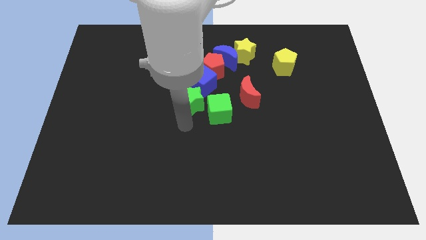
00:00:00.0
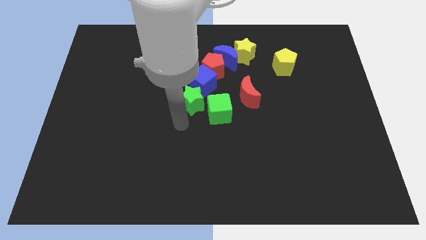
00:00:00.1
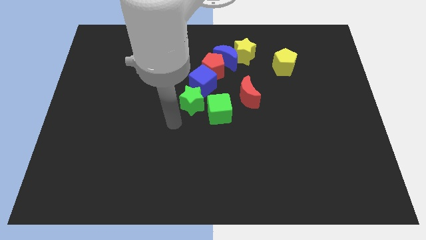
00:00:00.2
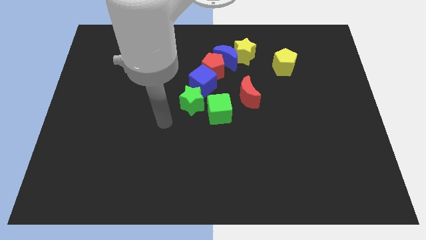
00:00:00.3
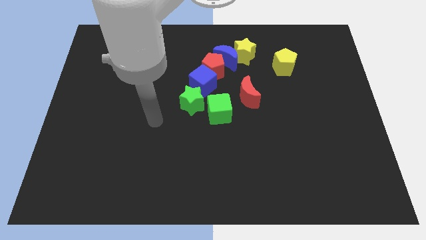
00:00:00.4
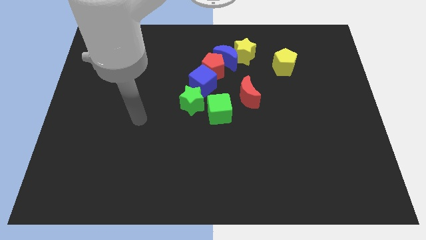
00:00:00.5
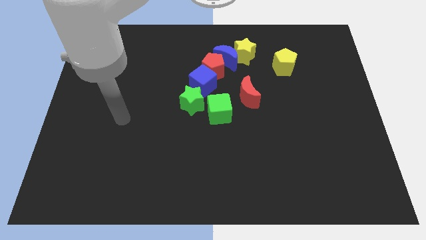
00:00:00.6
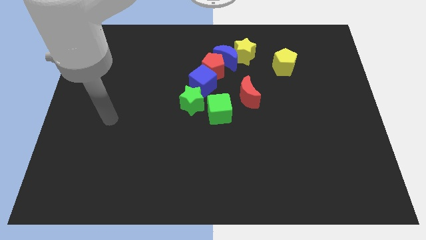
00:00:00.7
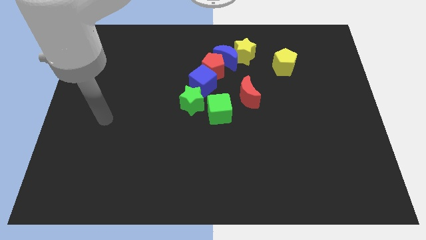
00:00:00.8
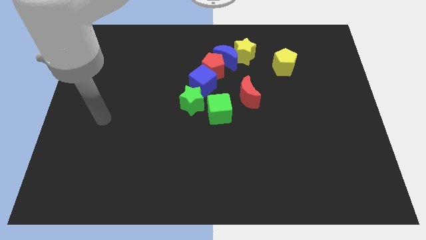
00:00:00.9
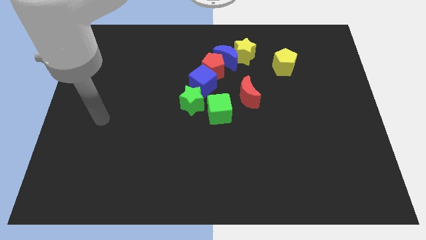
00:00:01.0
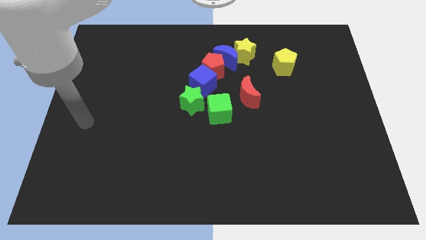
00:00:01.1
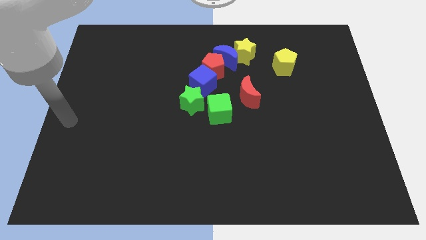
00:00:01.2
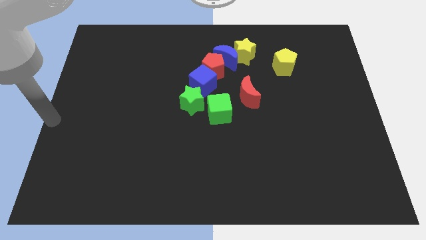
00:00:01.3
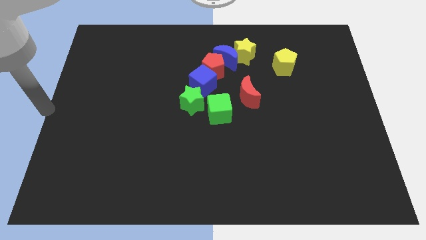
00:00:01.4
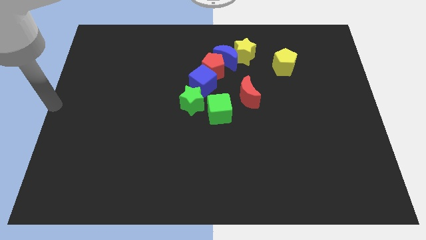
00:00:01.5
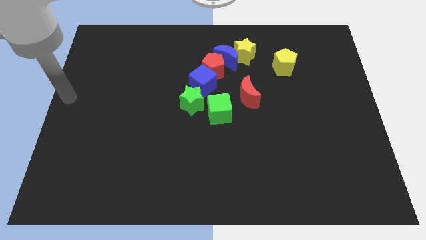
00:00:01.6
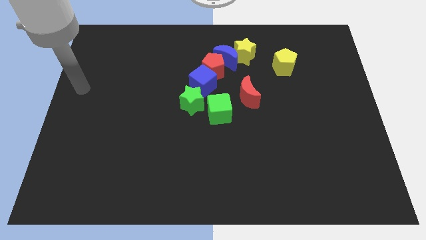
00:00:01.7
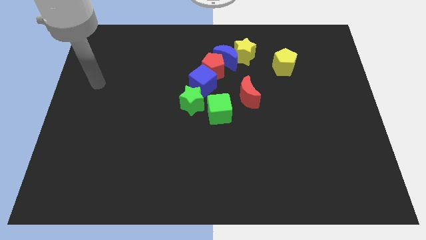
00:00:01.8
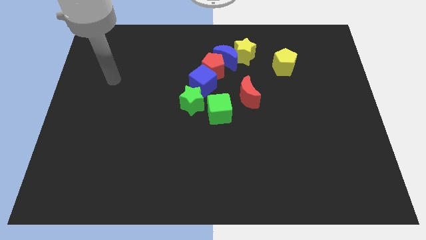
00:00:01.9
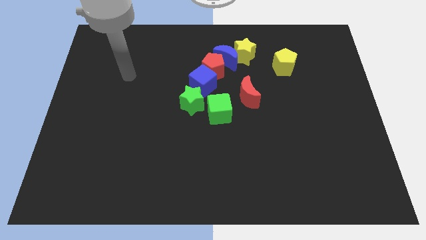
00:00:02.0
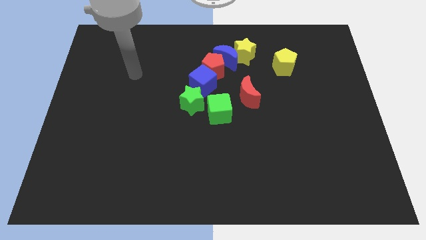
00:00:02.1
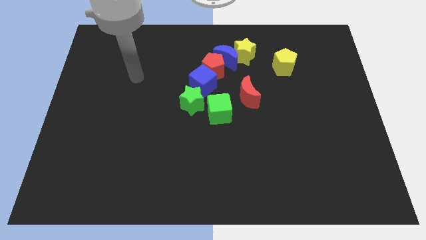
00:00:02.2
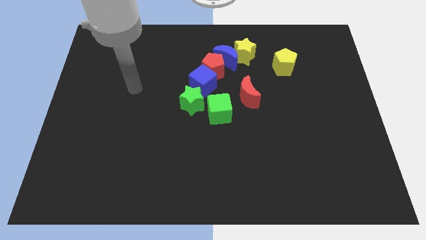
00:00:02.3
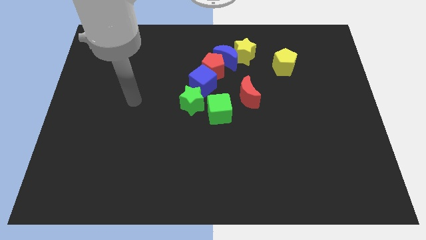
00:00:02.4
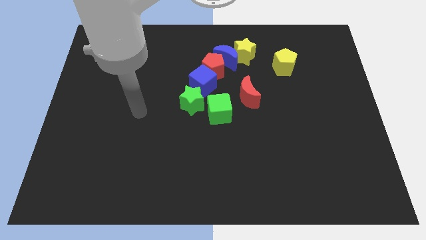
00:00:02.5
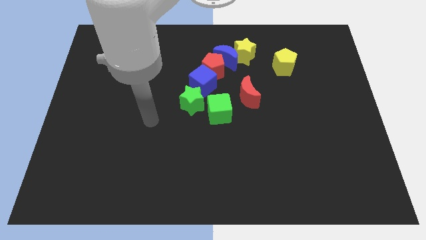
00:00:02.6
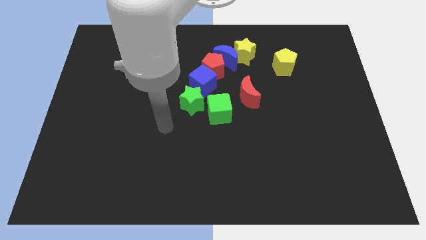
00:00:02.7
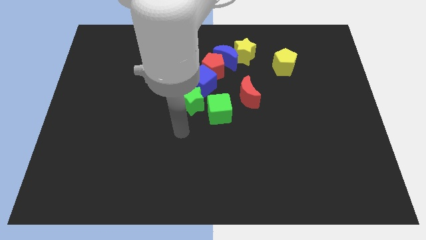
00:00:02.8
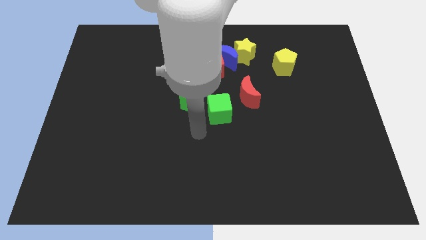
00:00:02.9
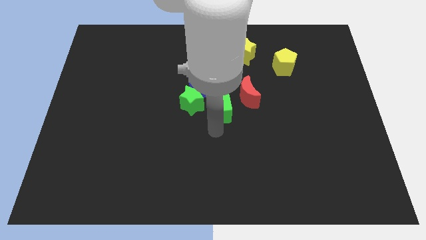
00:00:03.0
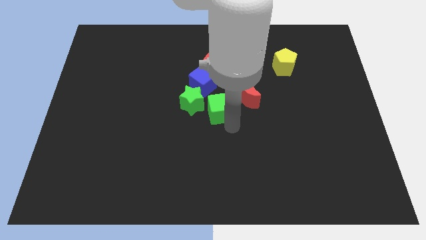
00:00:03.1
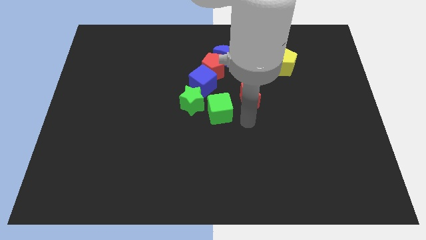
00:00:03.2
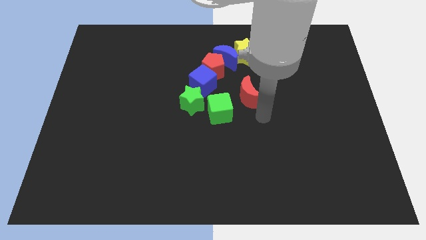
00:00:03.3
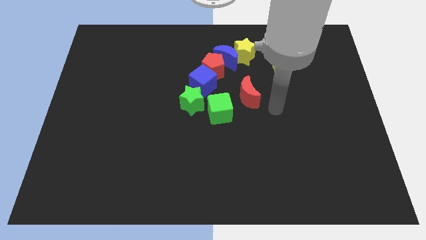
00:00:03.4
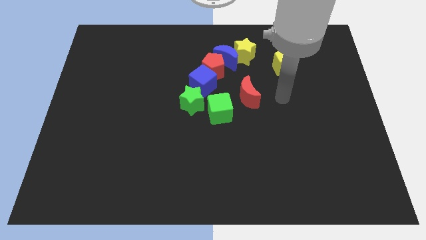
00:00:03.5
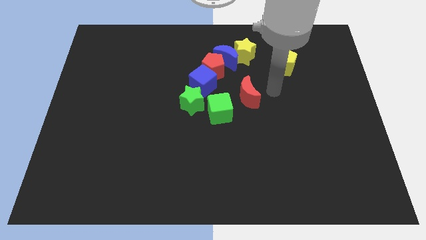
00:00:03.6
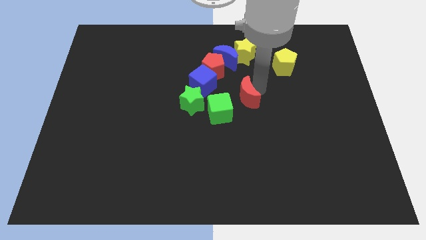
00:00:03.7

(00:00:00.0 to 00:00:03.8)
move your arm to the right of red crescent

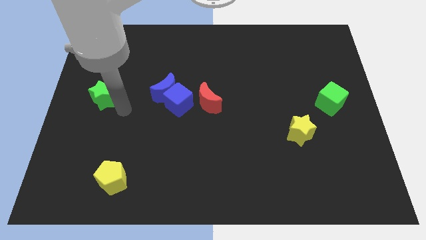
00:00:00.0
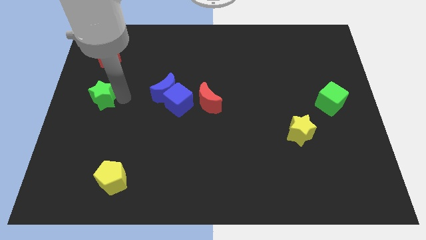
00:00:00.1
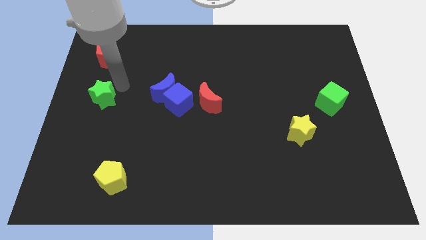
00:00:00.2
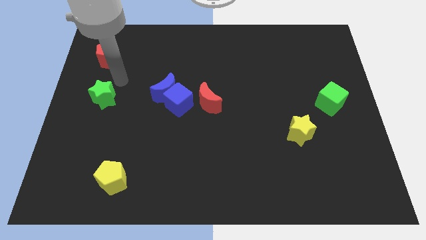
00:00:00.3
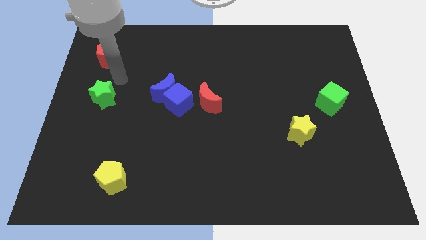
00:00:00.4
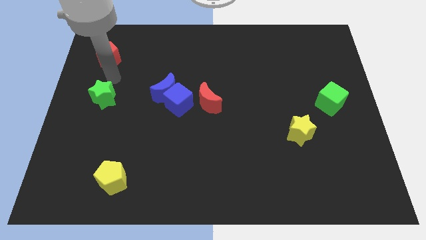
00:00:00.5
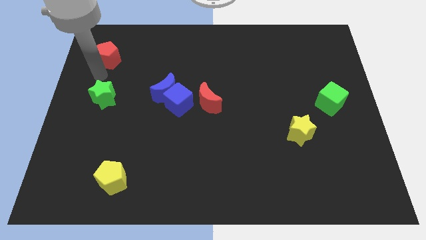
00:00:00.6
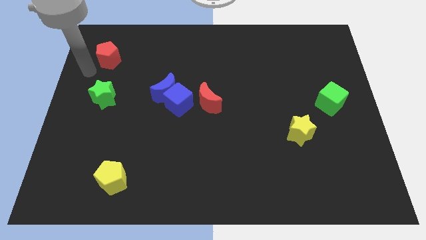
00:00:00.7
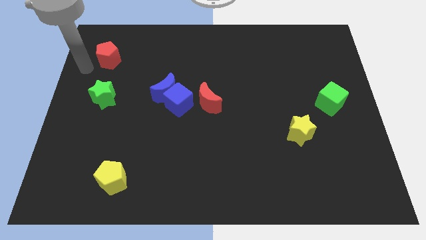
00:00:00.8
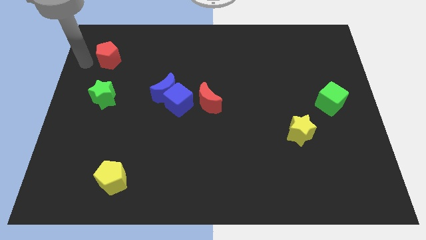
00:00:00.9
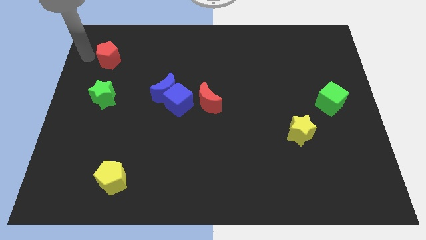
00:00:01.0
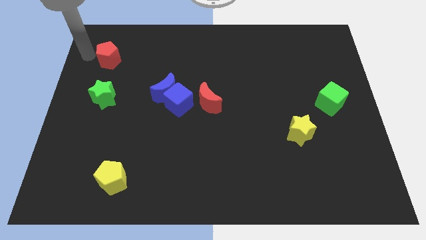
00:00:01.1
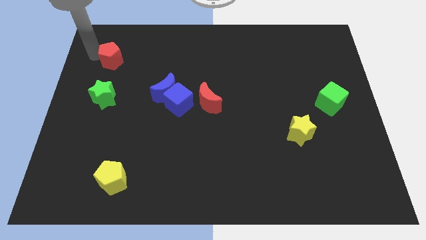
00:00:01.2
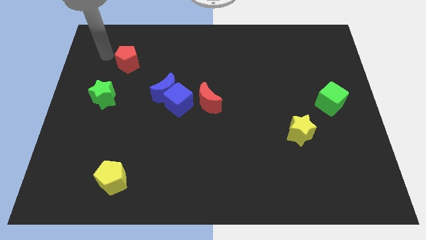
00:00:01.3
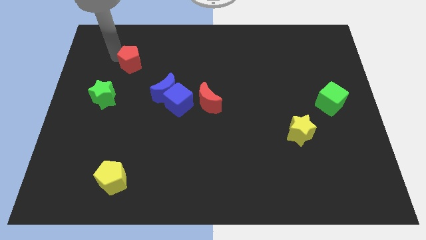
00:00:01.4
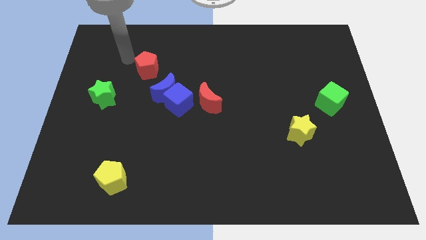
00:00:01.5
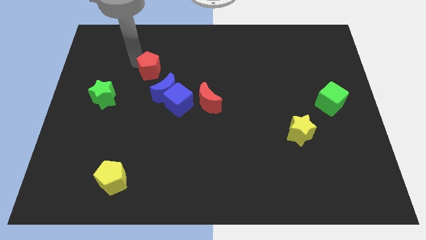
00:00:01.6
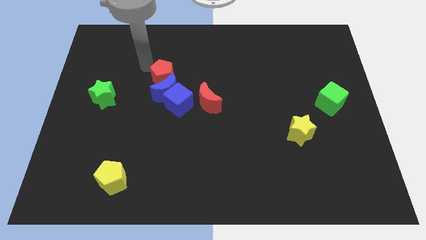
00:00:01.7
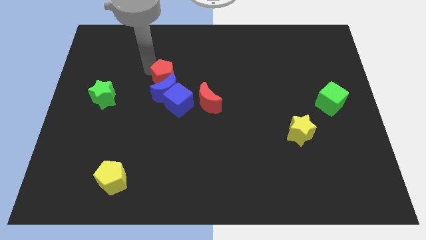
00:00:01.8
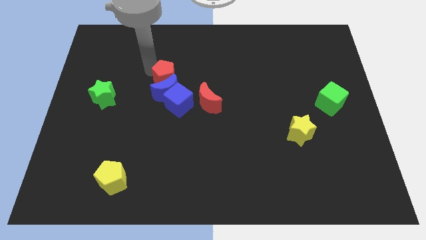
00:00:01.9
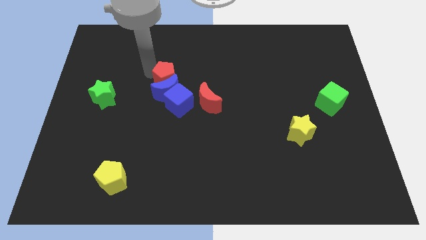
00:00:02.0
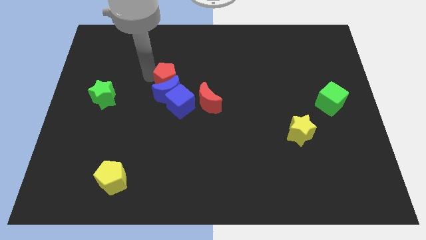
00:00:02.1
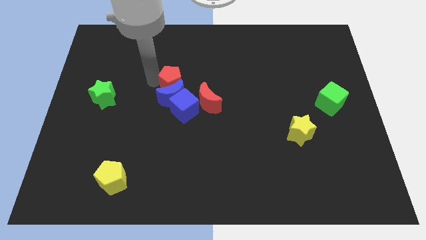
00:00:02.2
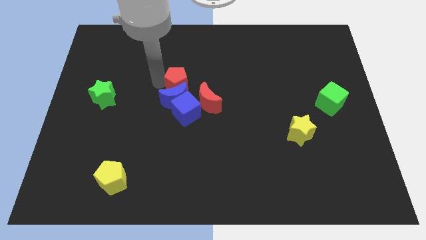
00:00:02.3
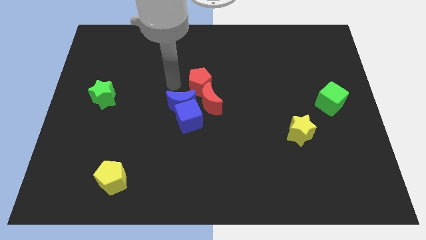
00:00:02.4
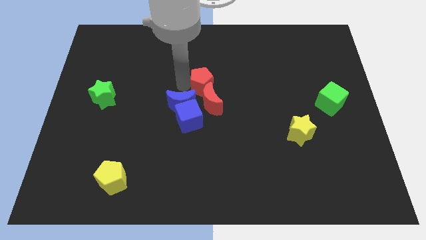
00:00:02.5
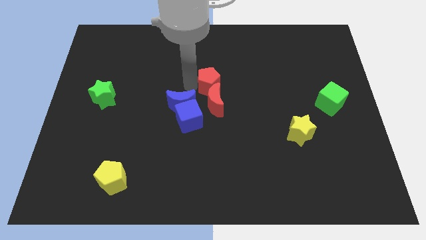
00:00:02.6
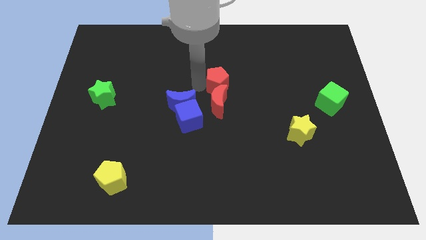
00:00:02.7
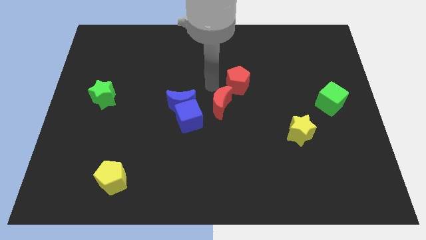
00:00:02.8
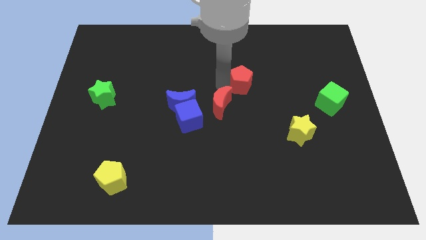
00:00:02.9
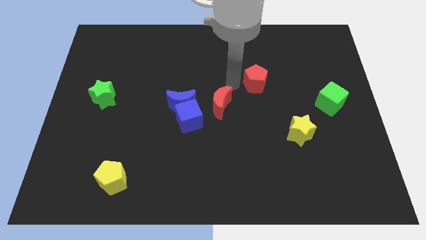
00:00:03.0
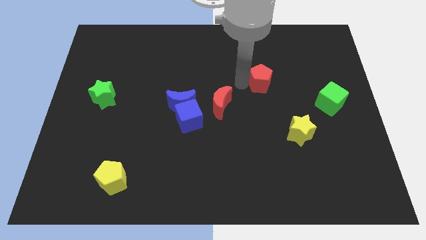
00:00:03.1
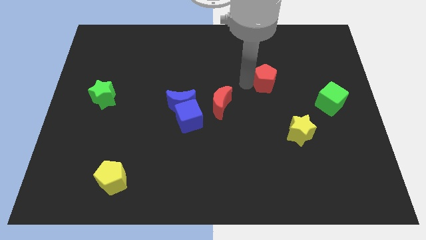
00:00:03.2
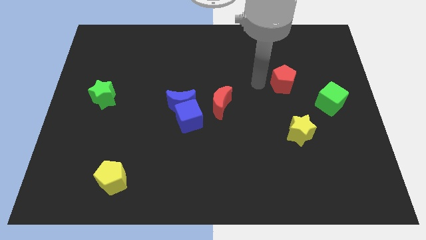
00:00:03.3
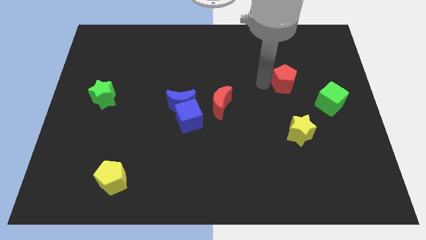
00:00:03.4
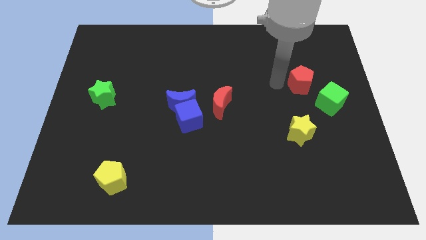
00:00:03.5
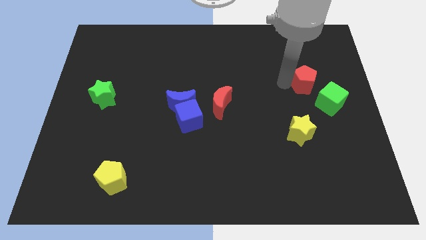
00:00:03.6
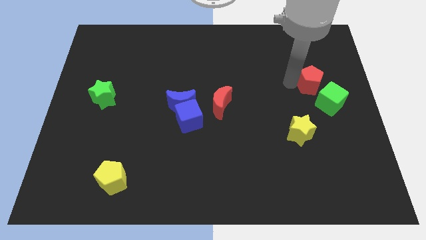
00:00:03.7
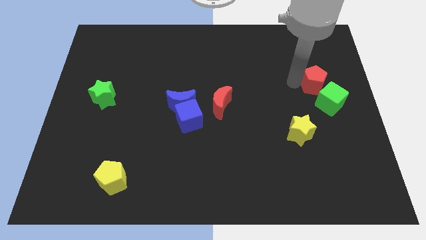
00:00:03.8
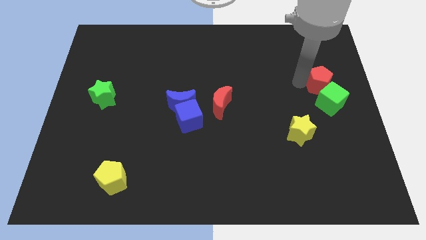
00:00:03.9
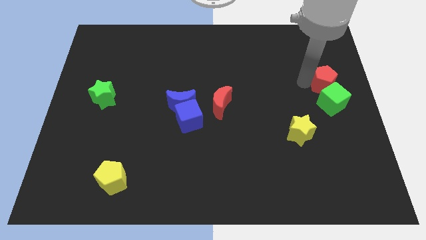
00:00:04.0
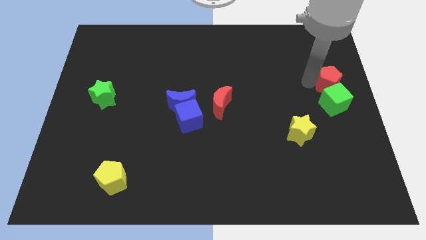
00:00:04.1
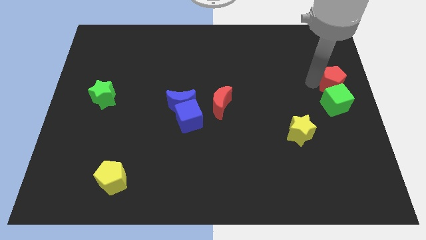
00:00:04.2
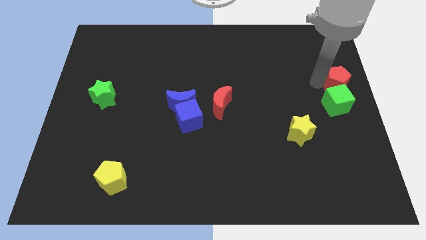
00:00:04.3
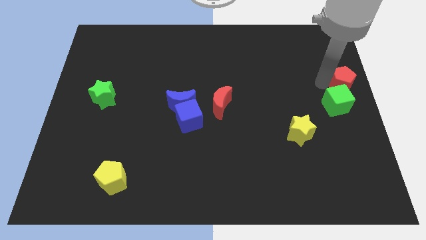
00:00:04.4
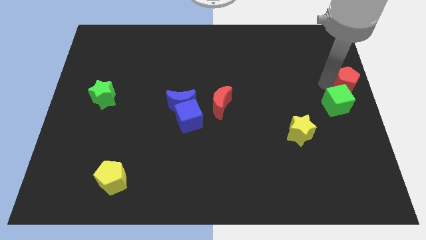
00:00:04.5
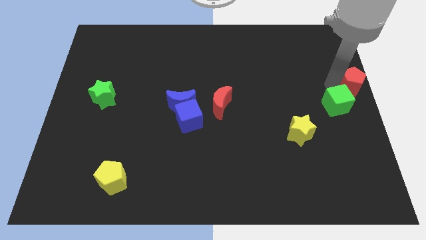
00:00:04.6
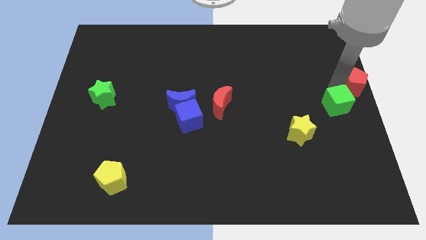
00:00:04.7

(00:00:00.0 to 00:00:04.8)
push the red pentagon to the top right of the green cube

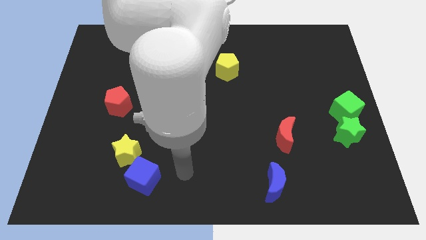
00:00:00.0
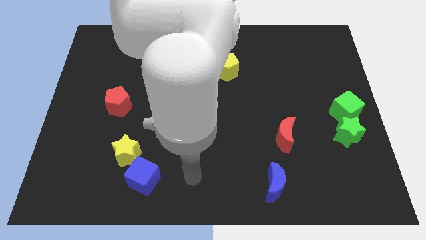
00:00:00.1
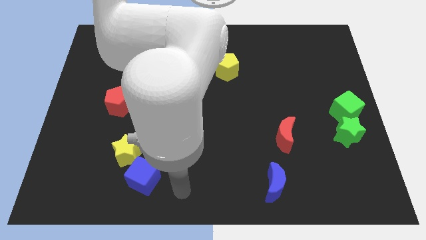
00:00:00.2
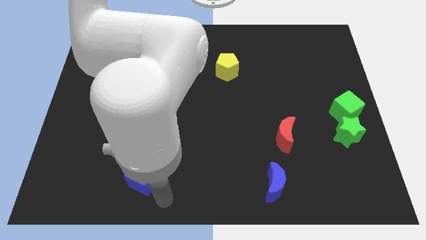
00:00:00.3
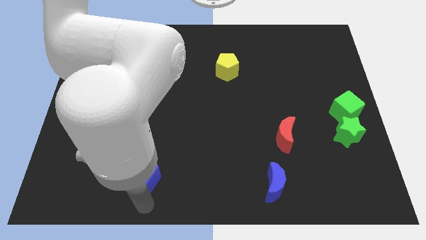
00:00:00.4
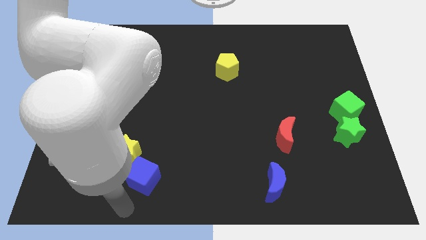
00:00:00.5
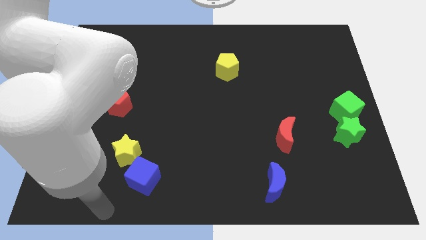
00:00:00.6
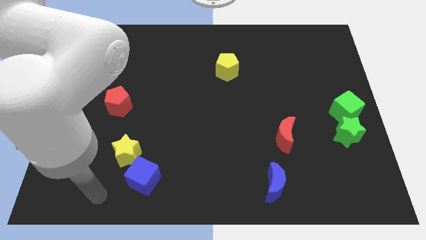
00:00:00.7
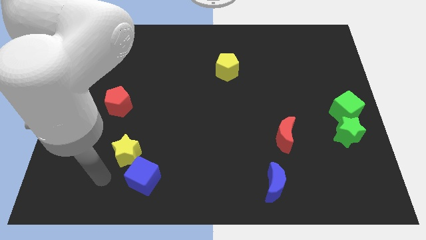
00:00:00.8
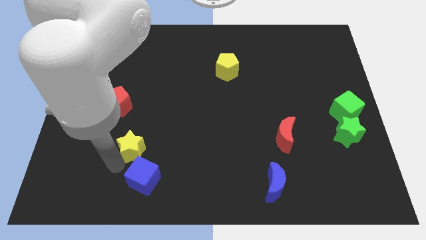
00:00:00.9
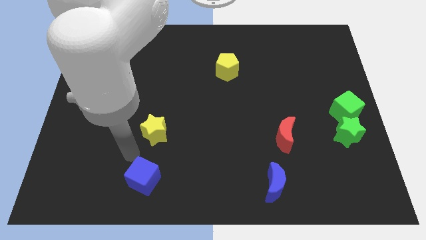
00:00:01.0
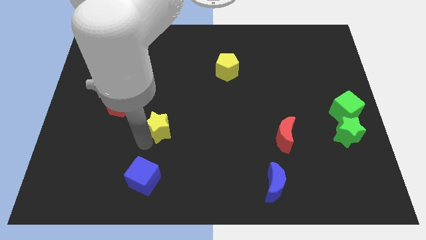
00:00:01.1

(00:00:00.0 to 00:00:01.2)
separate the yellow star from the blue cube
